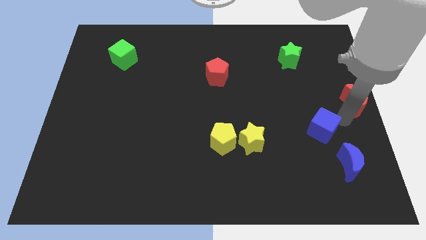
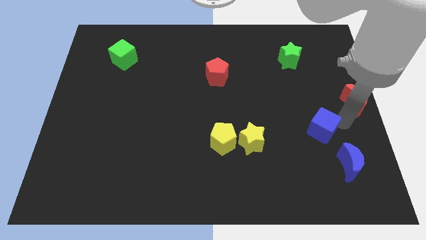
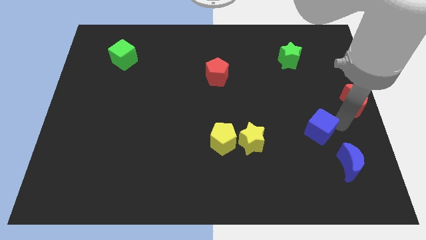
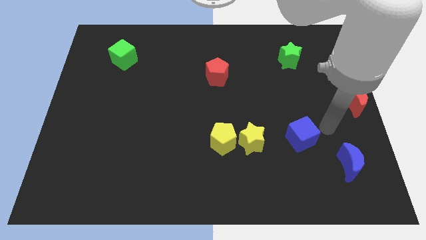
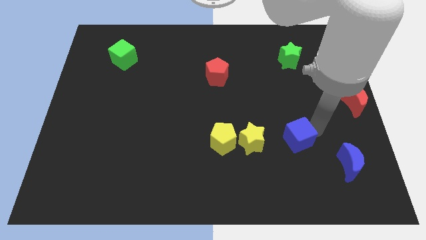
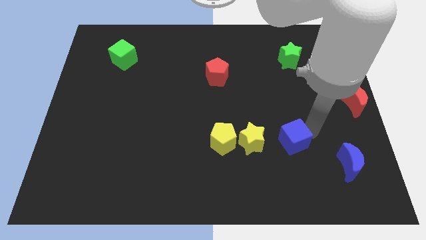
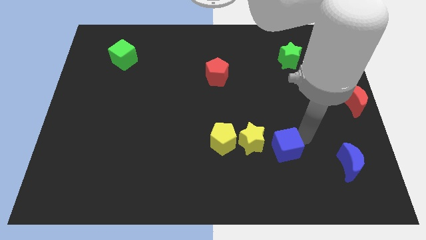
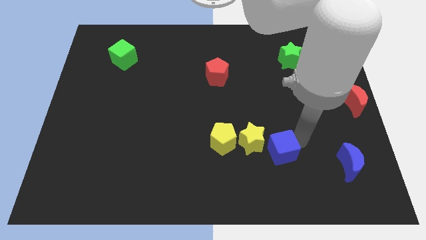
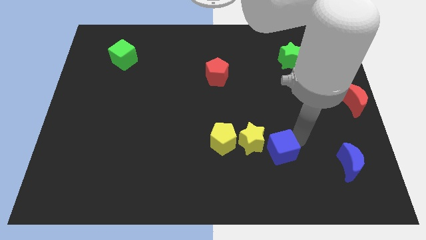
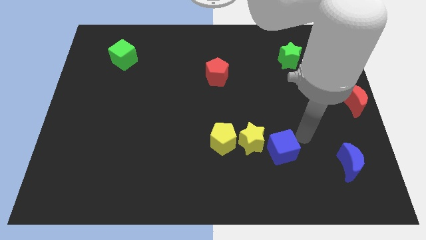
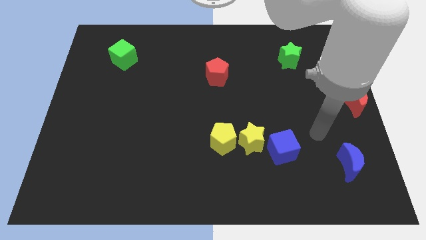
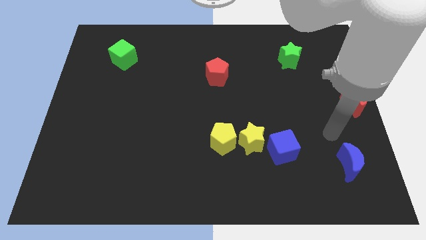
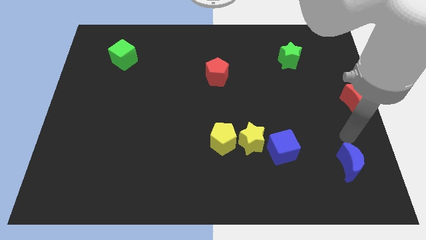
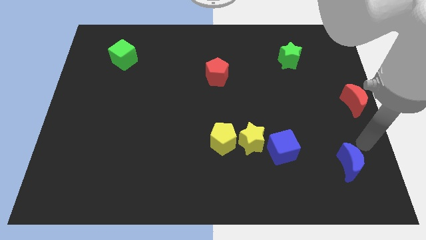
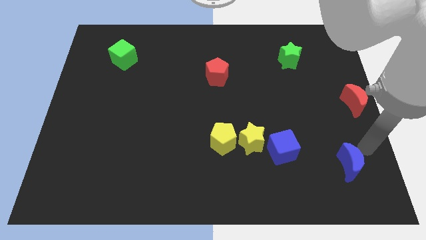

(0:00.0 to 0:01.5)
push the blue cube towards the yellow star

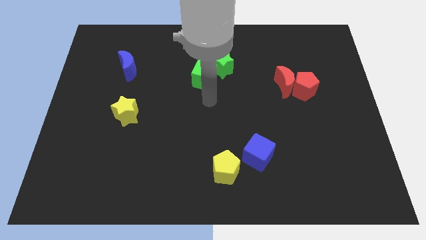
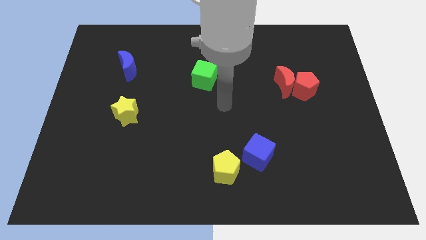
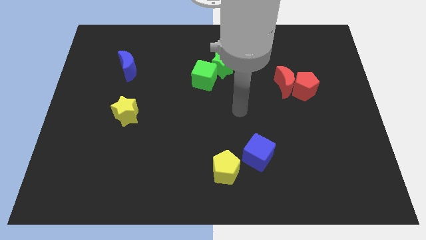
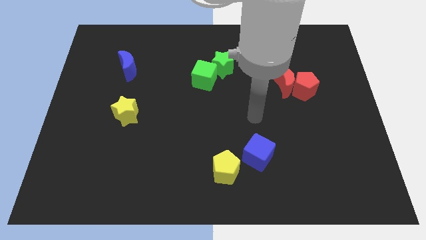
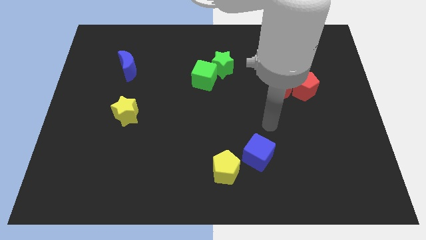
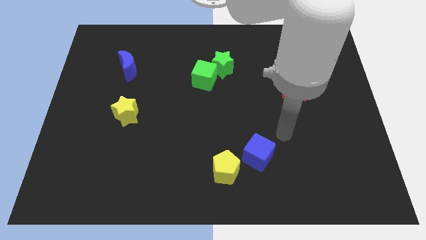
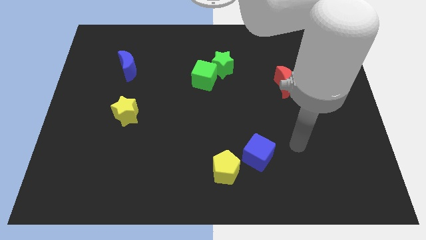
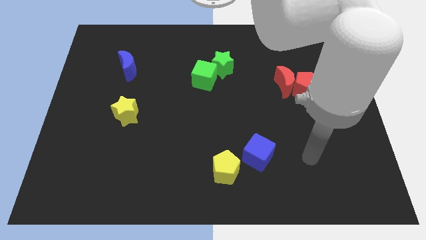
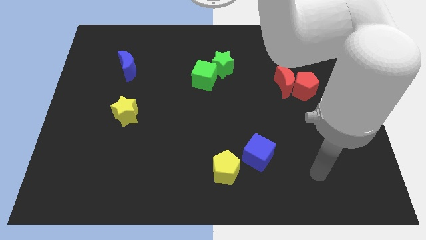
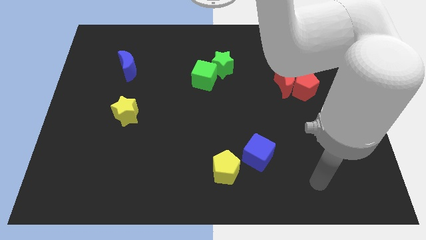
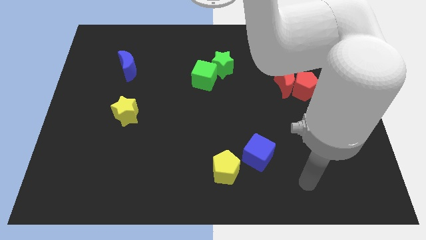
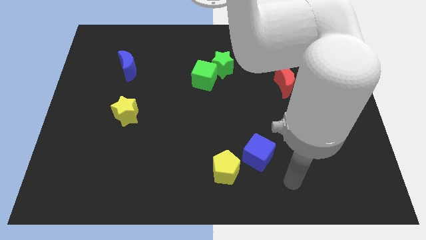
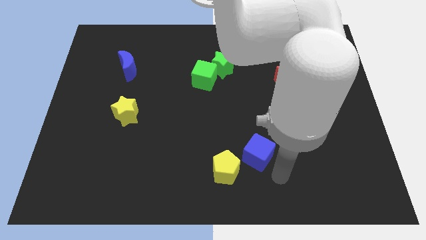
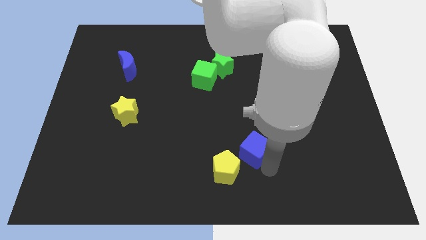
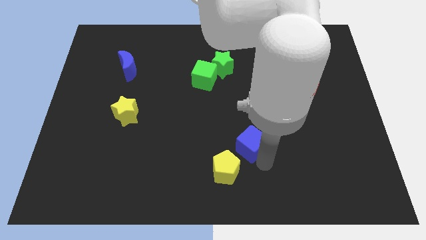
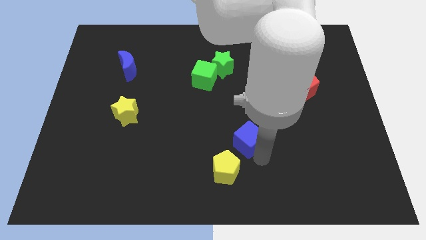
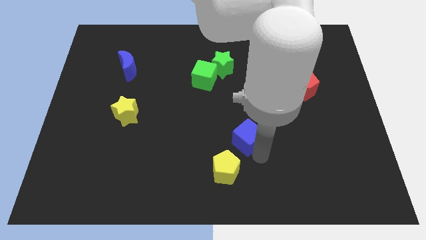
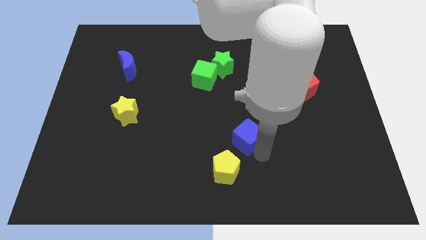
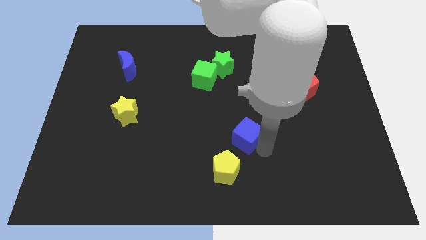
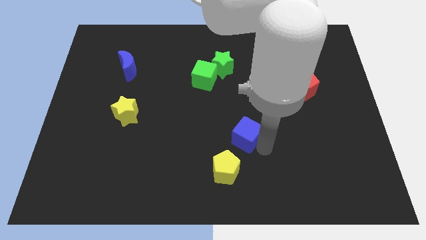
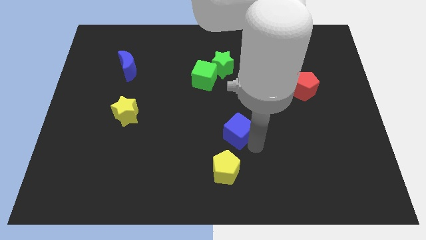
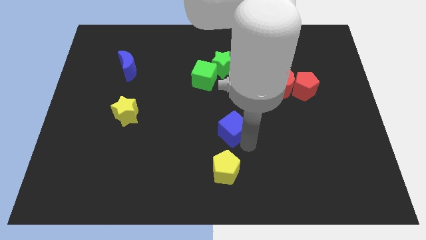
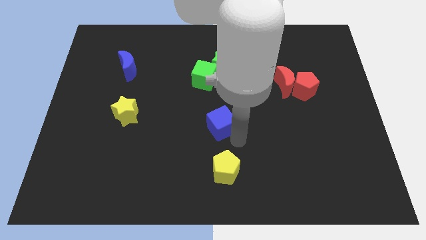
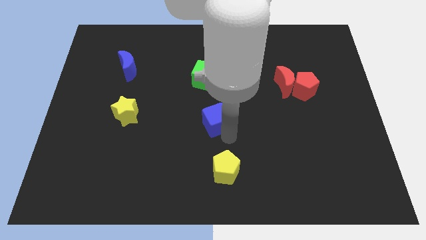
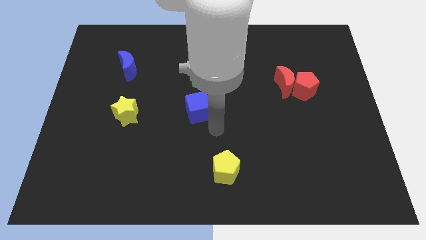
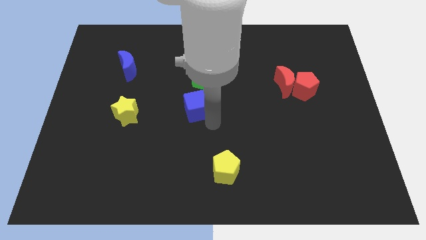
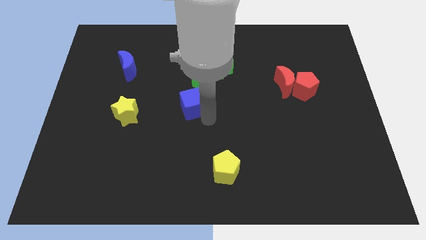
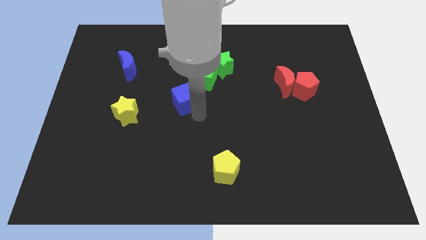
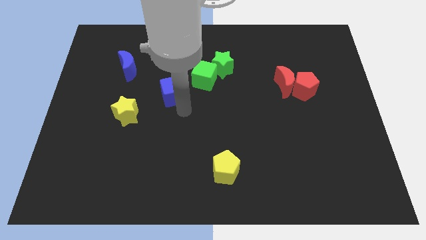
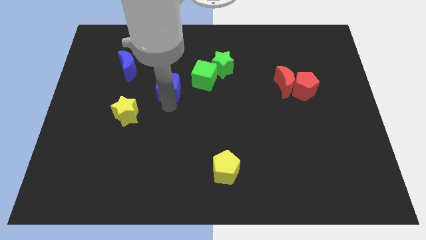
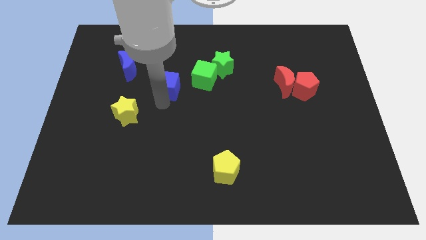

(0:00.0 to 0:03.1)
slide the blue cube diagonally top left to the yellow pentagon

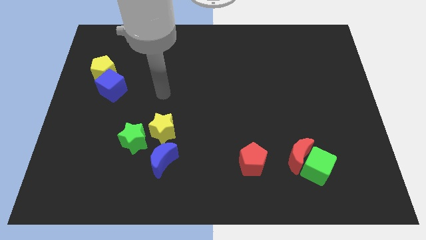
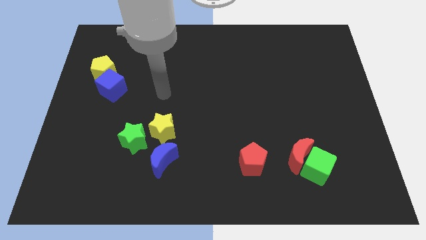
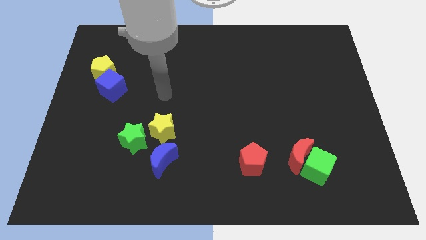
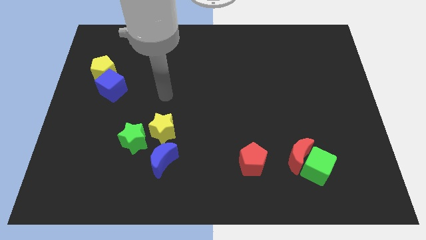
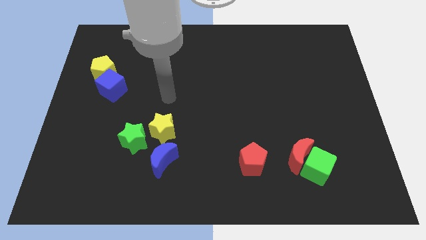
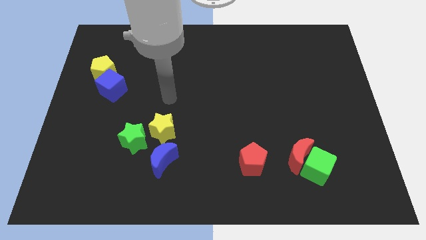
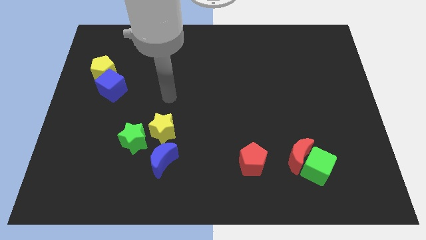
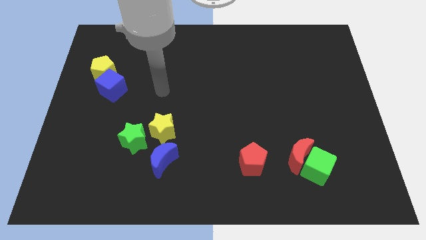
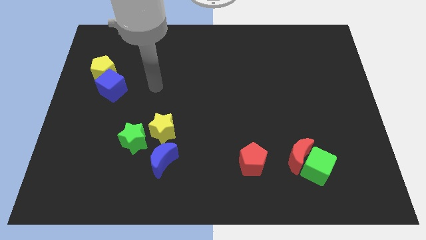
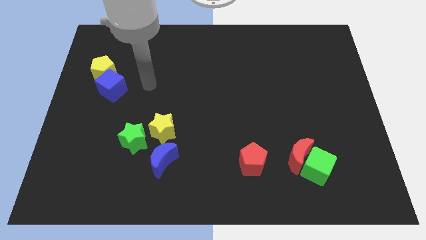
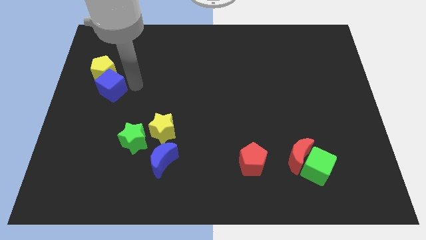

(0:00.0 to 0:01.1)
move your hand to the right of the blue cube

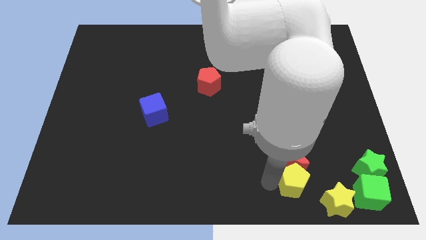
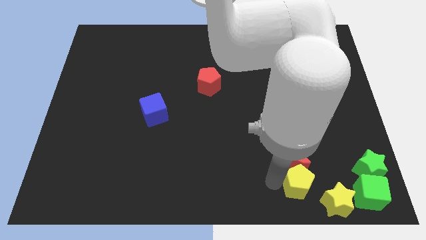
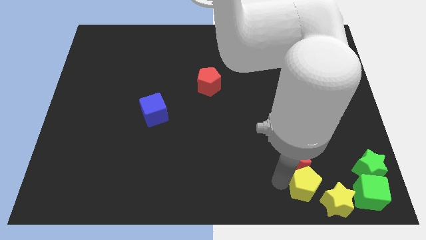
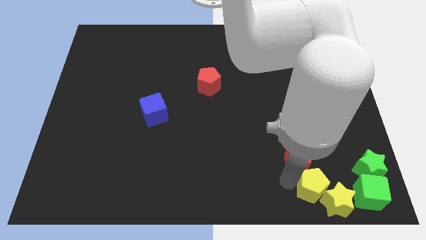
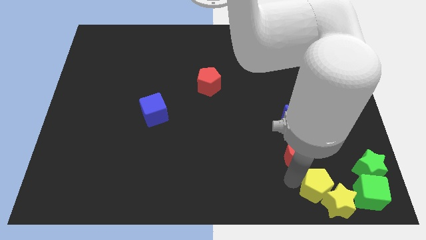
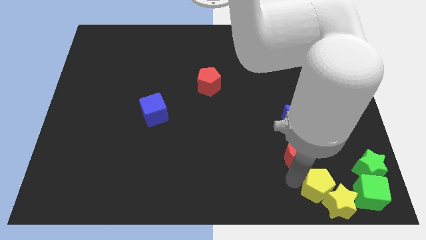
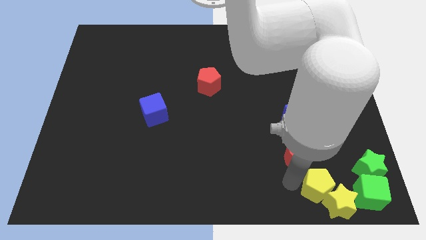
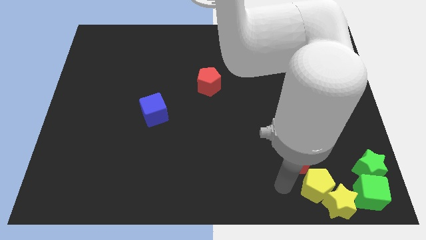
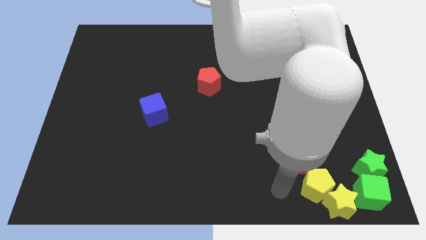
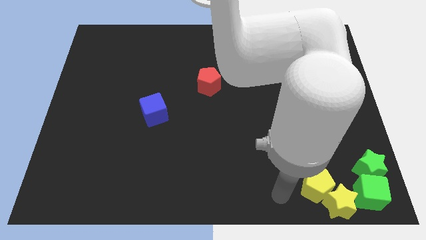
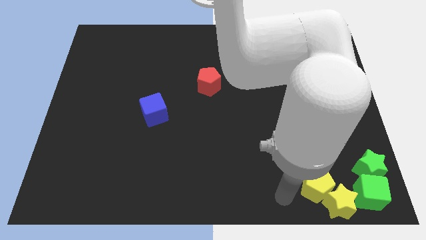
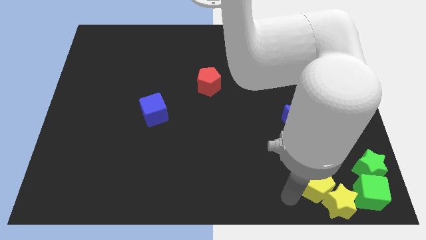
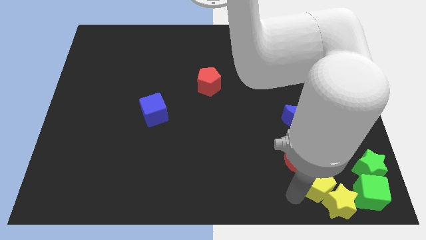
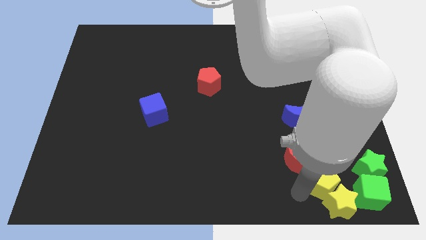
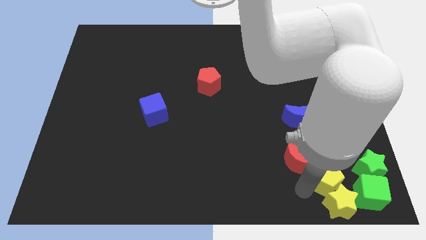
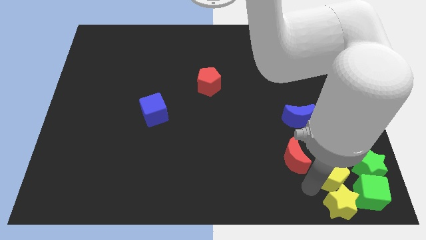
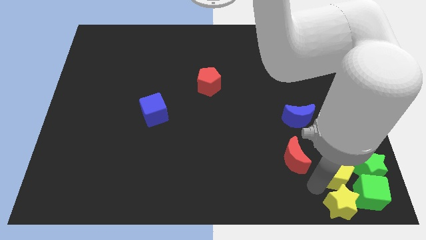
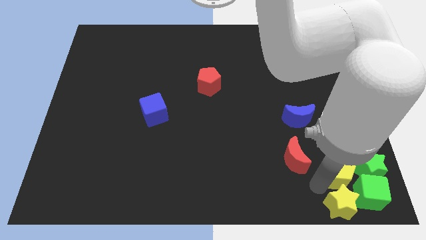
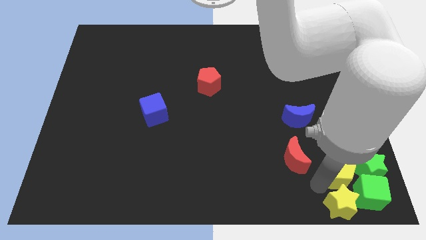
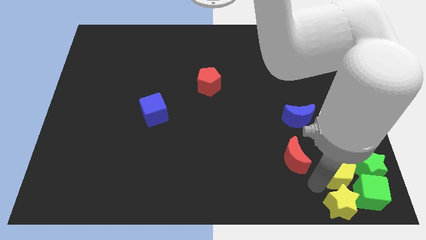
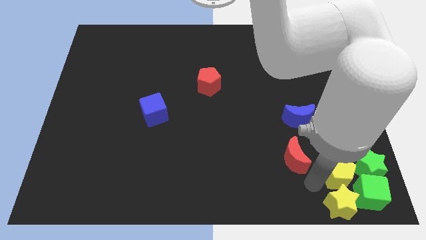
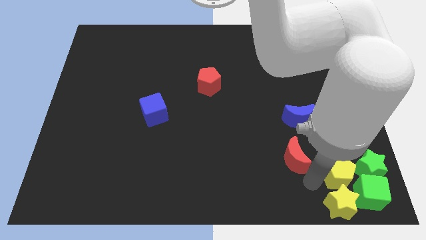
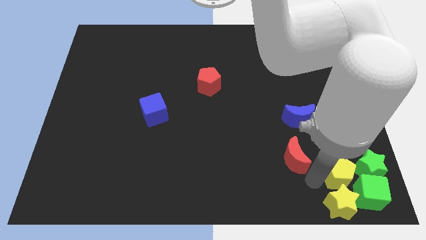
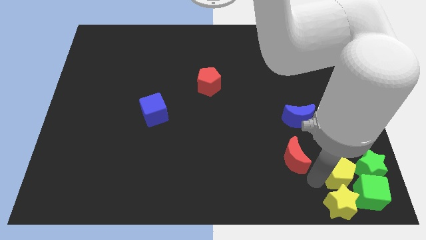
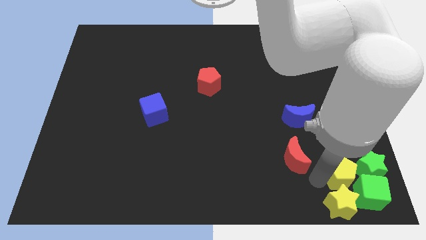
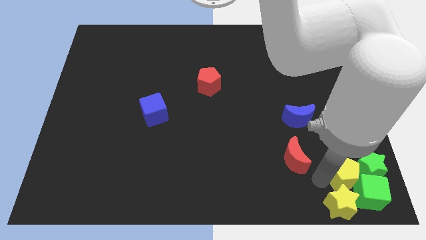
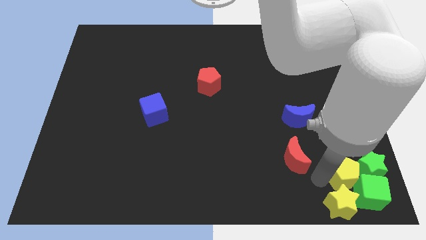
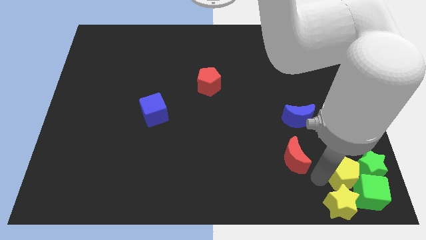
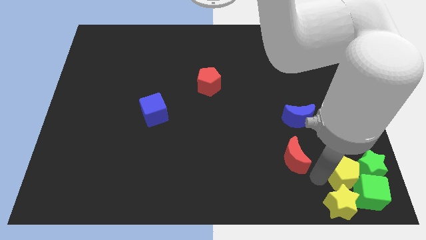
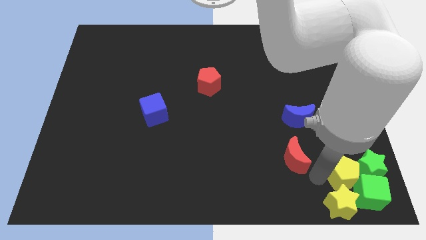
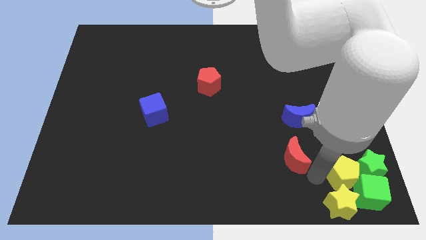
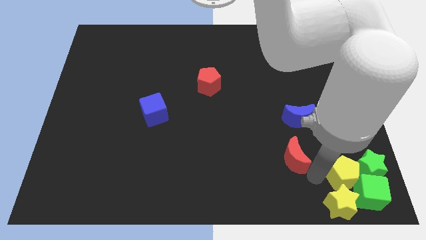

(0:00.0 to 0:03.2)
push the yellow pentagon into the group of blocks at the bottom right corner of the board
